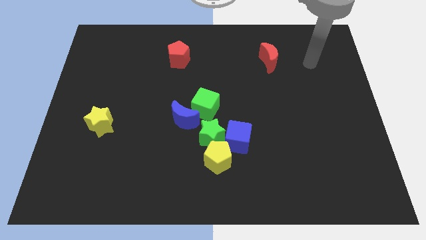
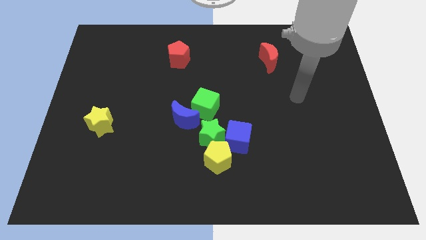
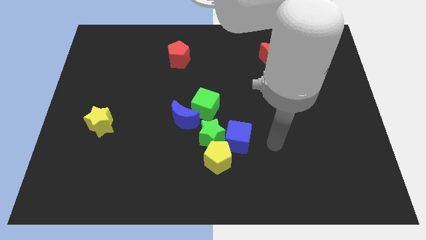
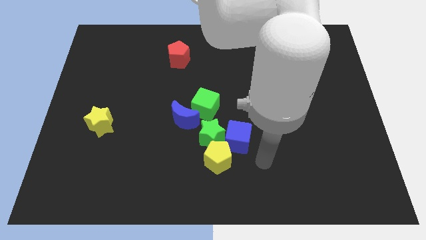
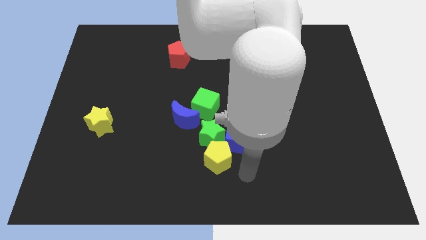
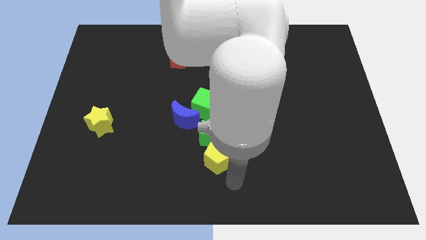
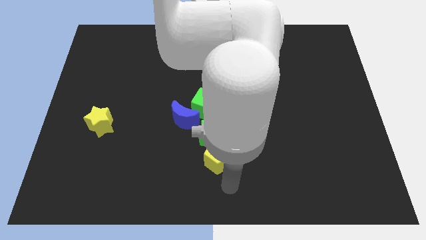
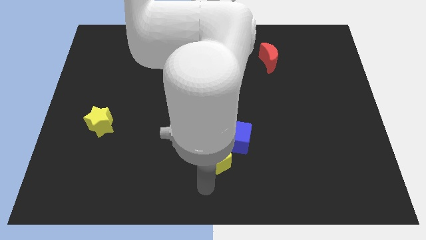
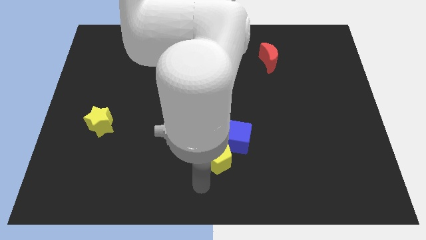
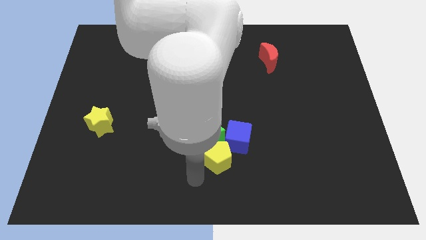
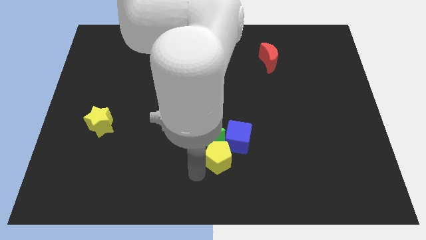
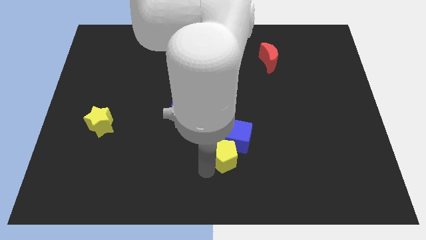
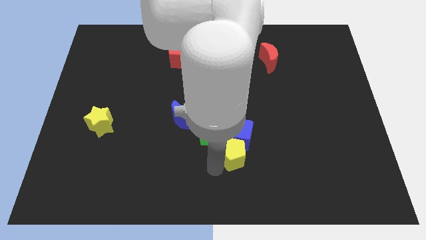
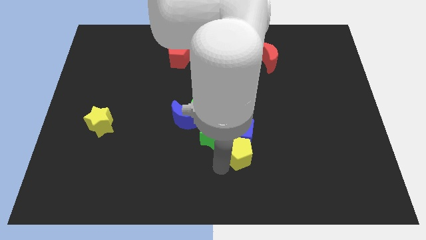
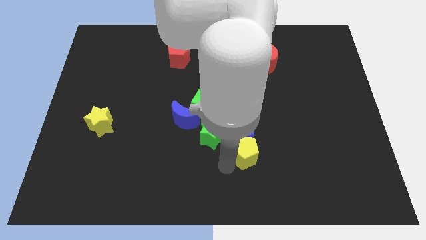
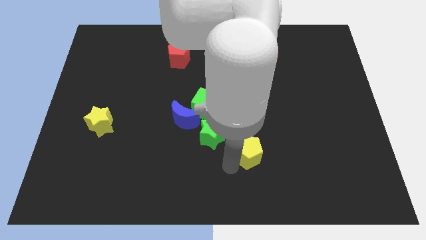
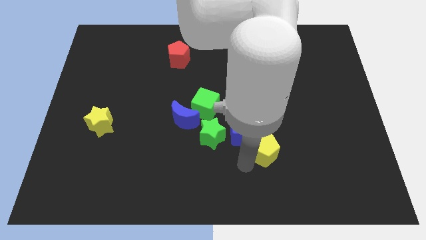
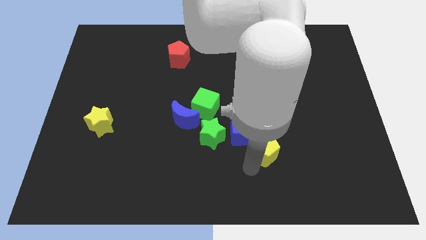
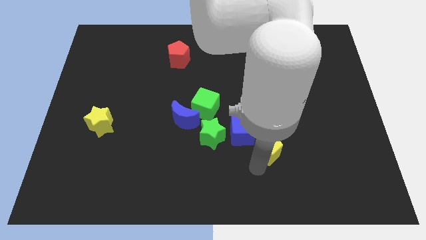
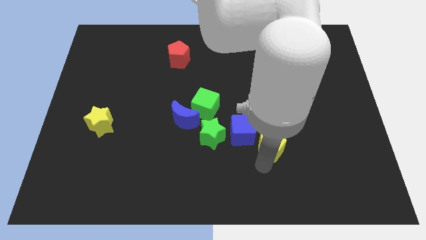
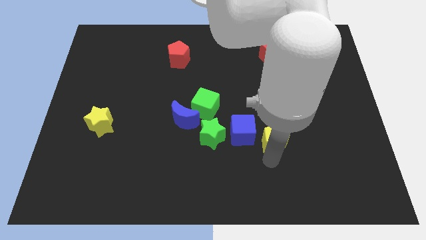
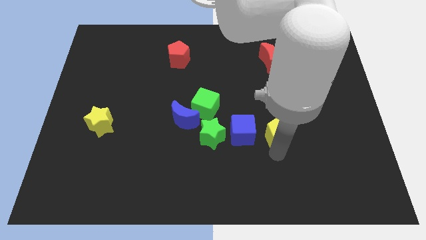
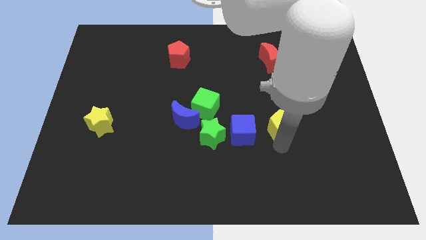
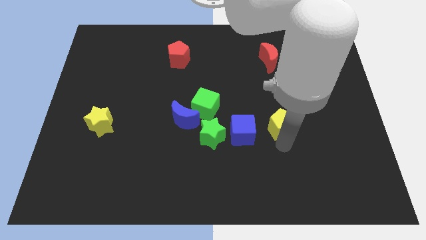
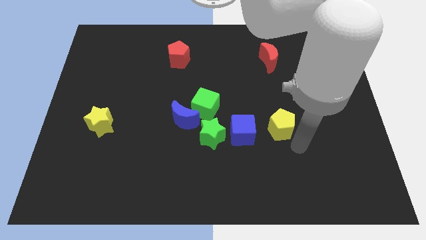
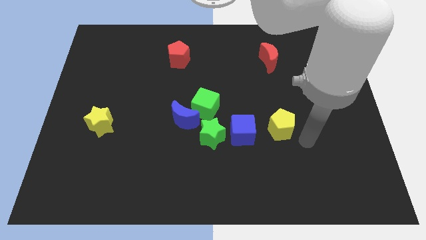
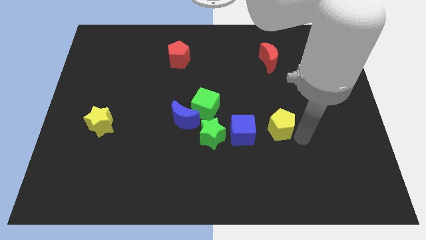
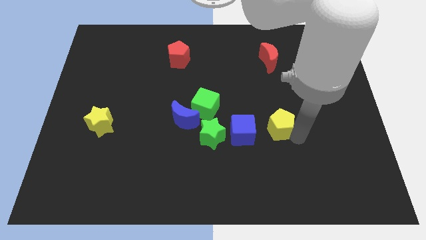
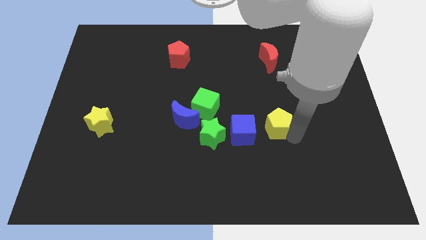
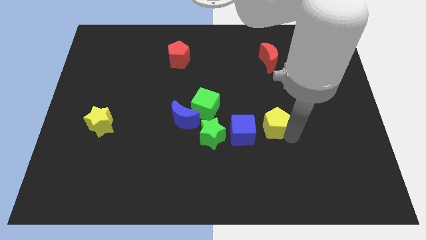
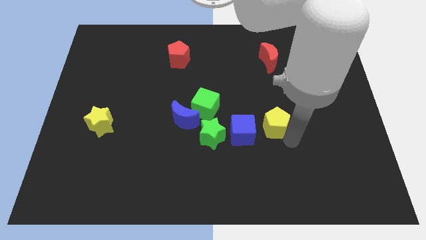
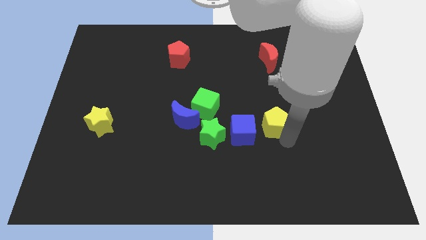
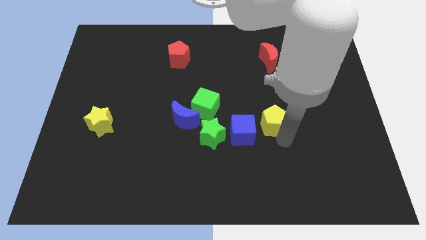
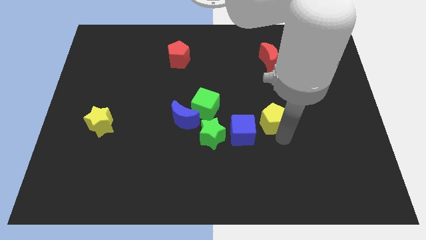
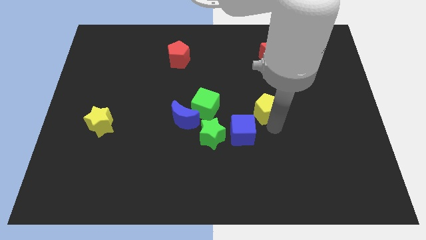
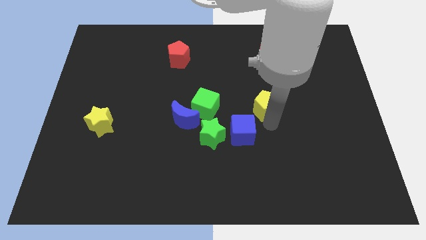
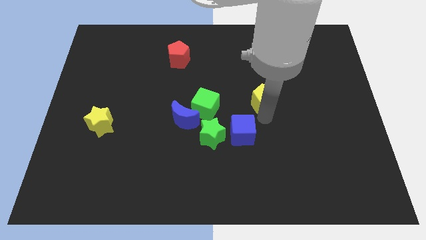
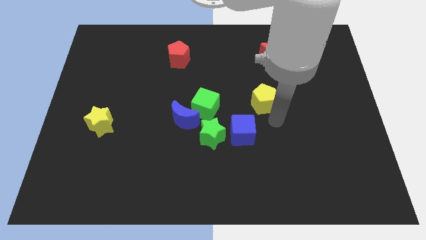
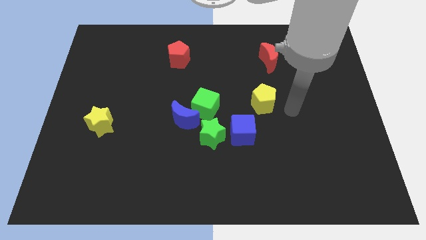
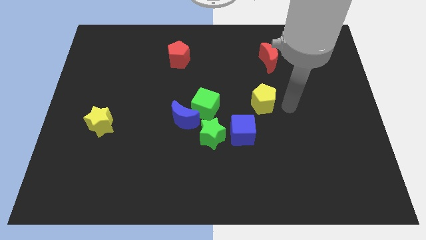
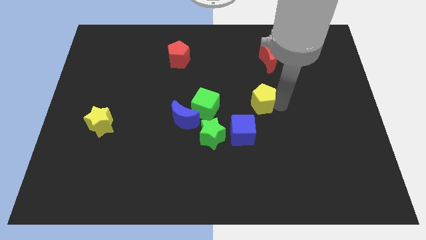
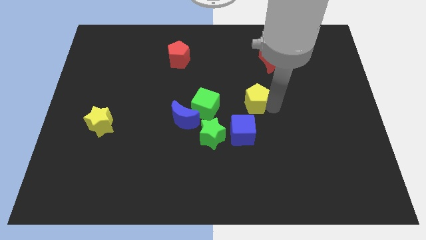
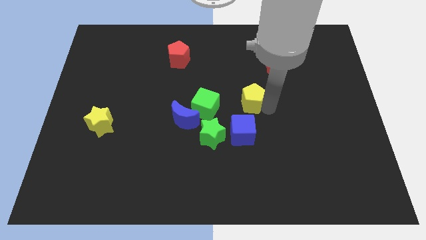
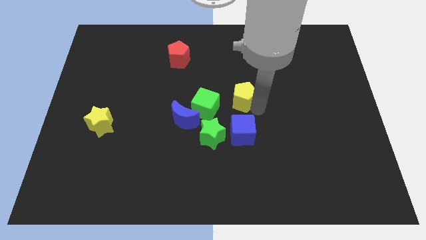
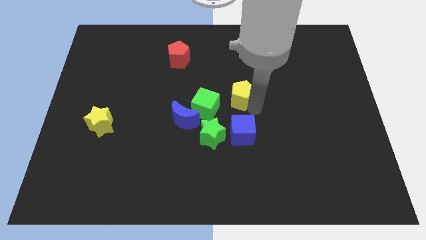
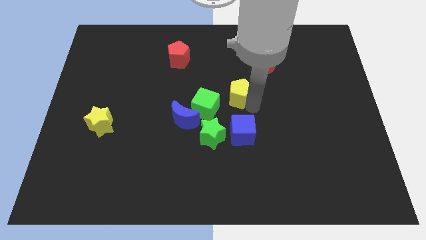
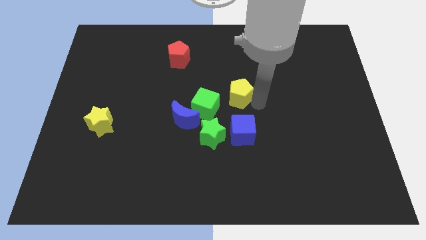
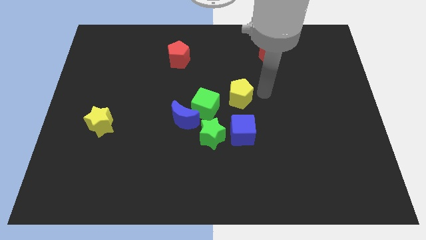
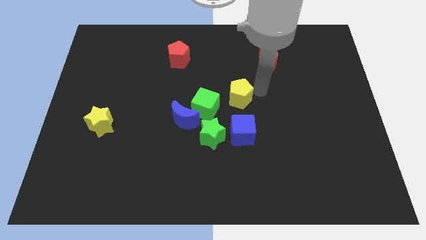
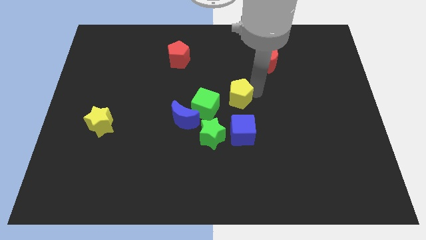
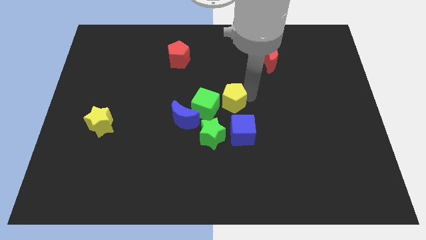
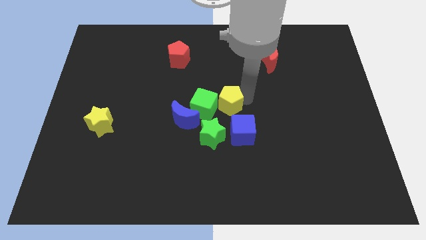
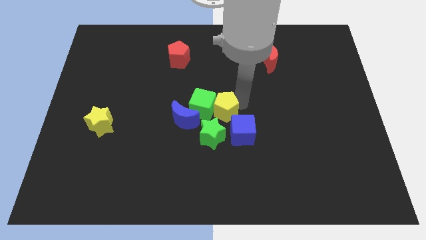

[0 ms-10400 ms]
move the yellow pentagon to the green cube

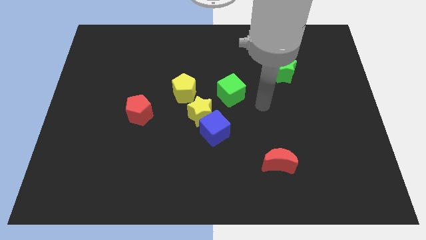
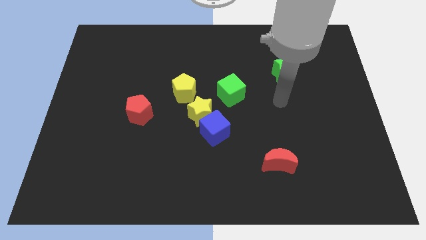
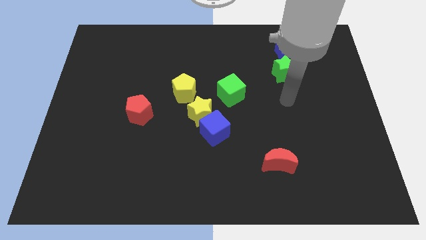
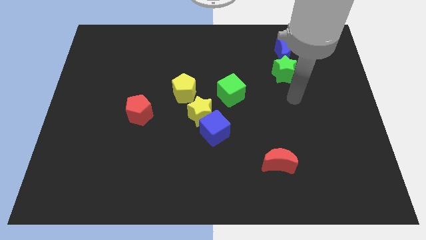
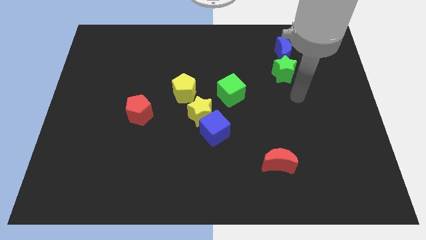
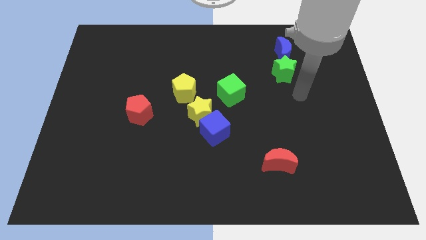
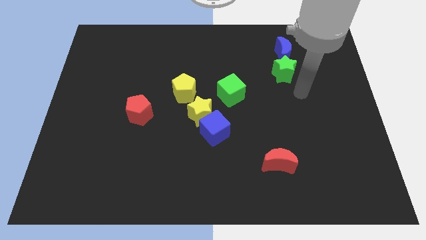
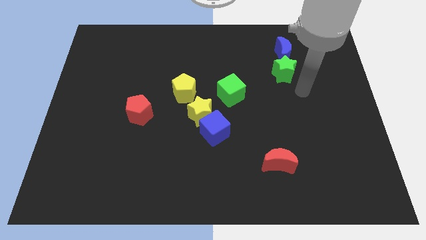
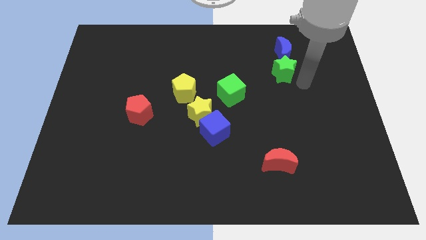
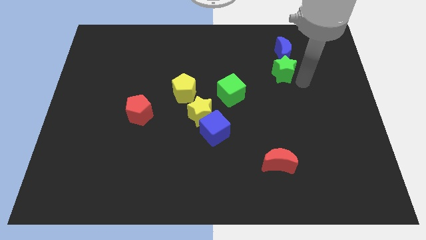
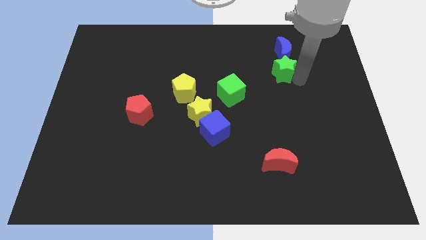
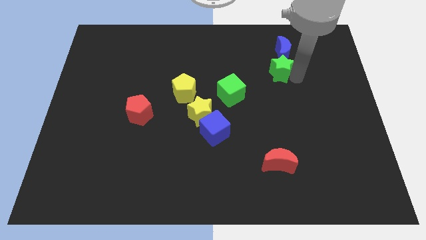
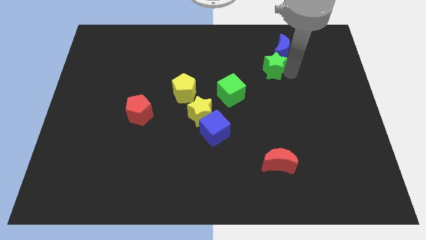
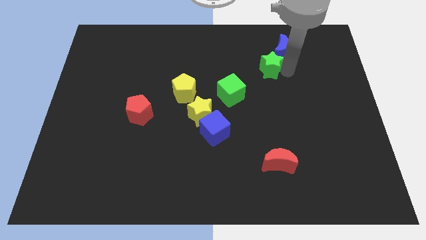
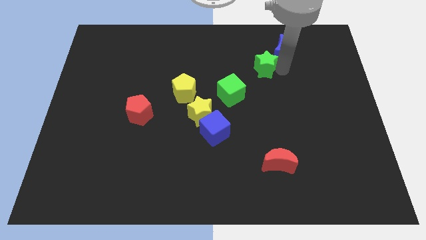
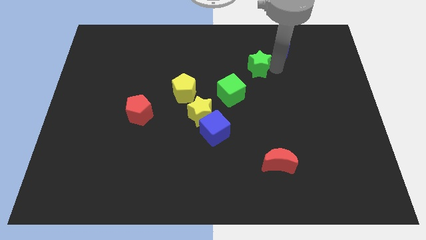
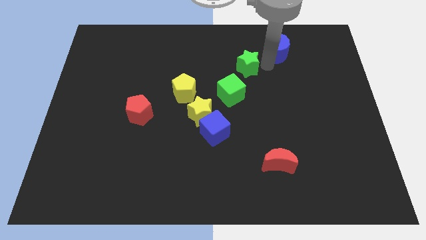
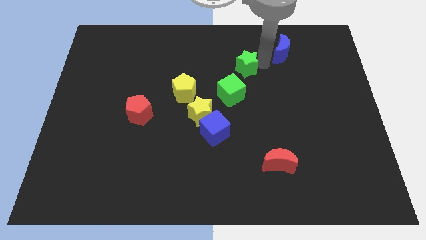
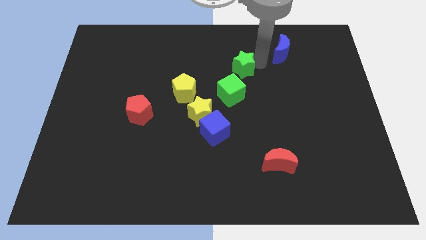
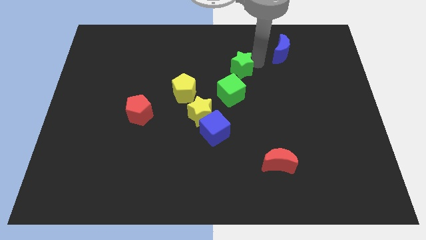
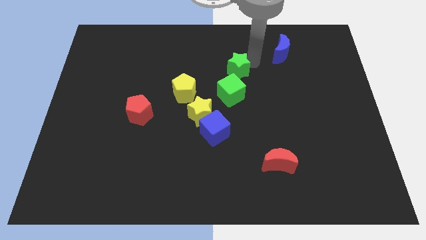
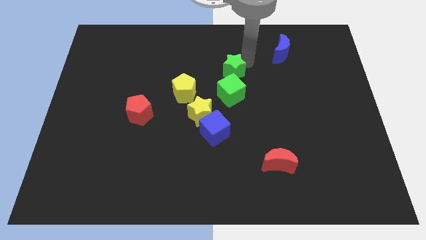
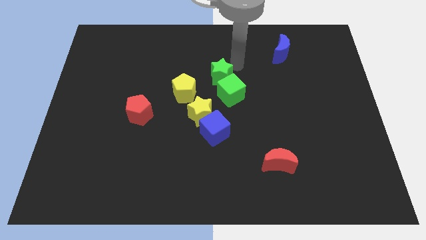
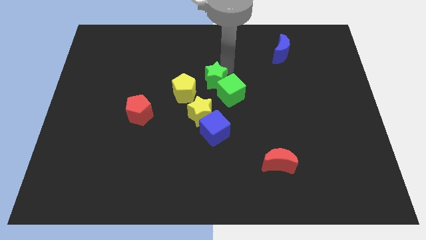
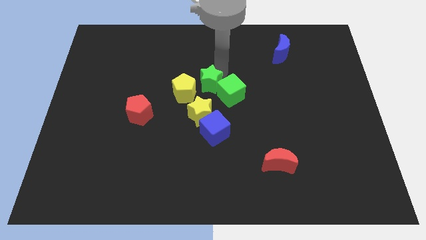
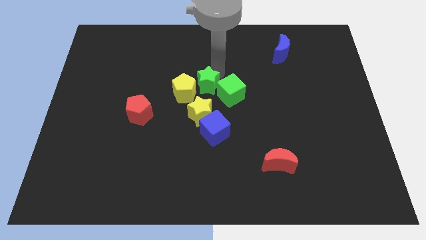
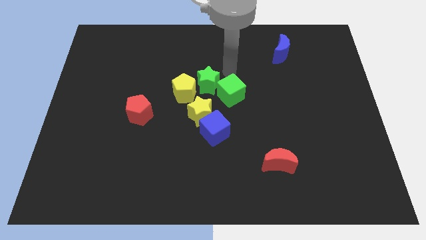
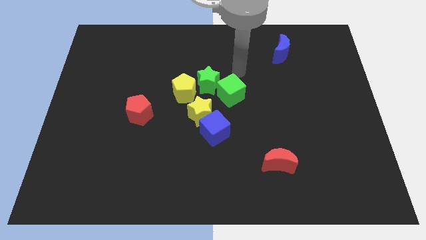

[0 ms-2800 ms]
move the green star next to the yellow pentagon
